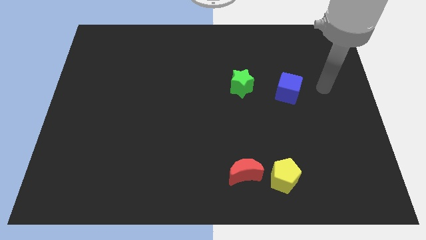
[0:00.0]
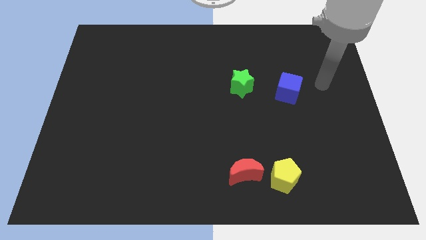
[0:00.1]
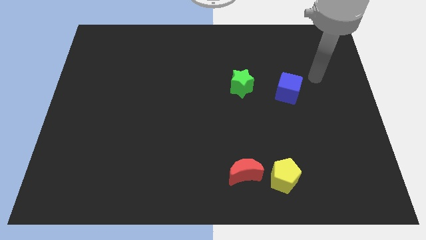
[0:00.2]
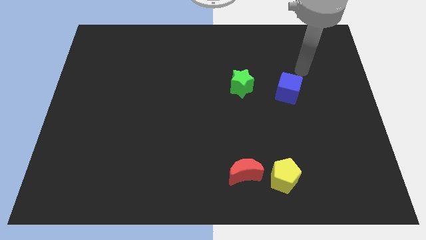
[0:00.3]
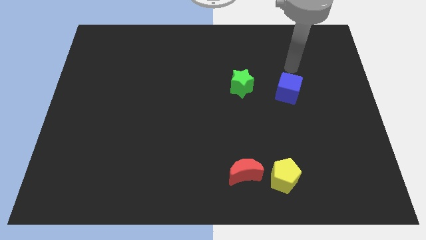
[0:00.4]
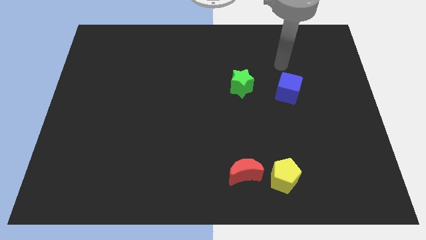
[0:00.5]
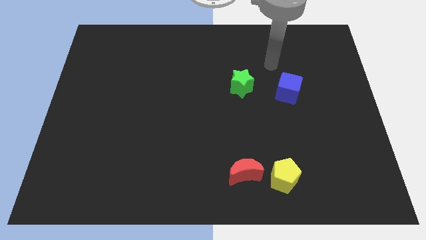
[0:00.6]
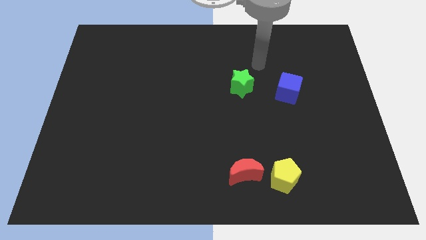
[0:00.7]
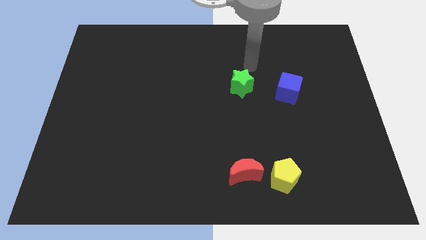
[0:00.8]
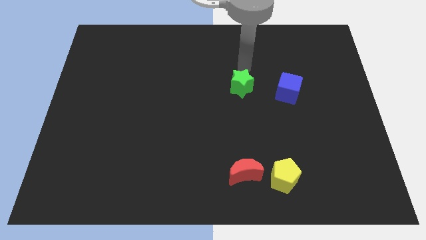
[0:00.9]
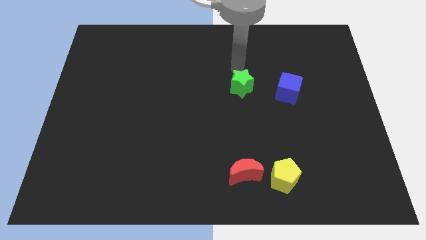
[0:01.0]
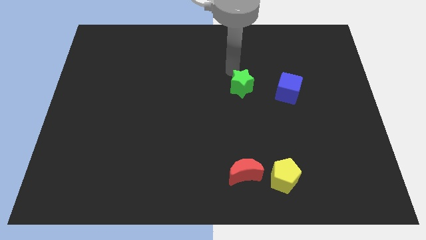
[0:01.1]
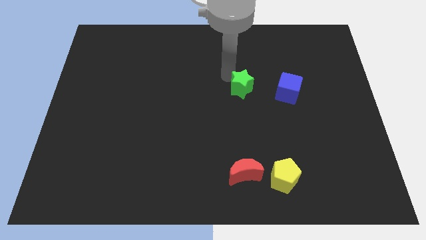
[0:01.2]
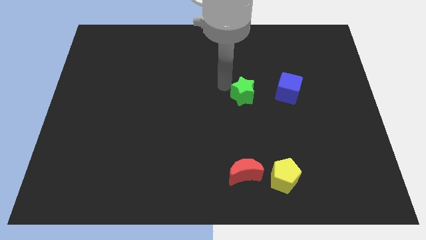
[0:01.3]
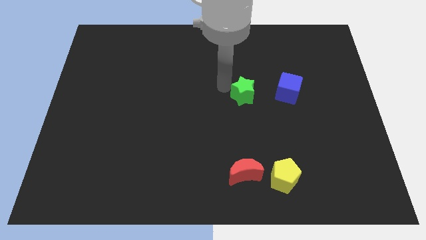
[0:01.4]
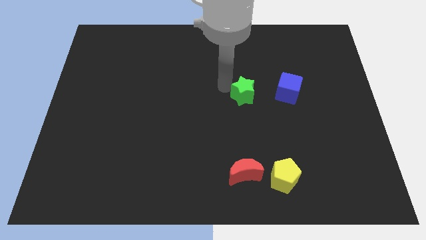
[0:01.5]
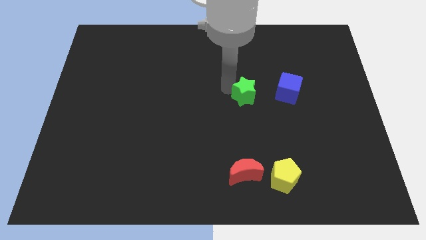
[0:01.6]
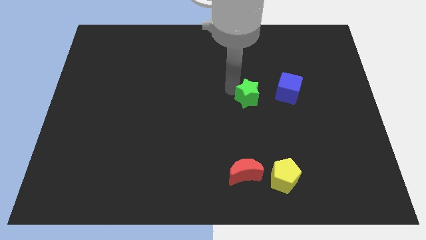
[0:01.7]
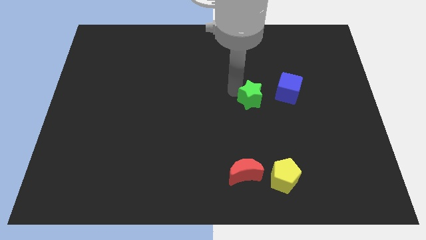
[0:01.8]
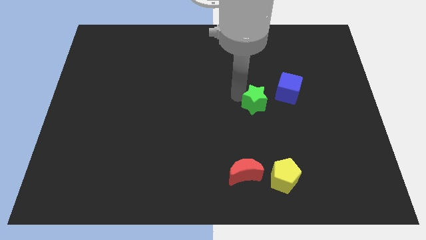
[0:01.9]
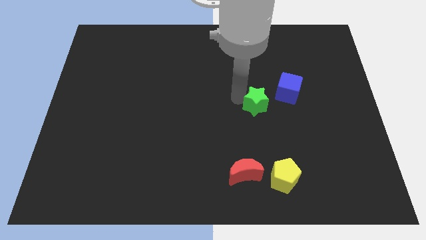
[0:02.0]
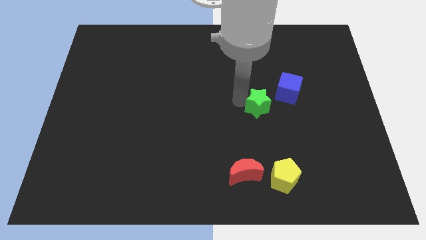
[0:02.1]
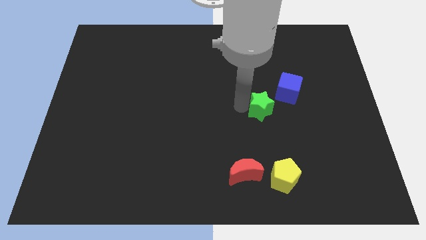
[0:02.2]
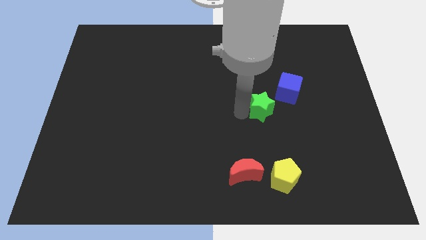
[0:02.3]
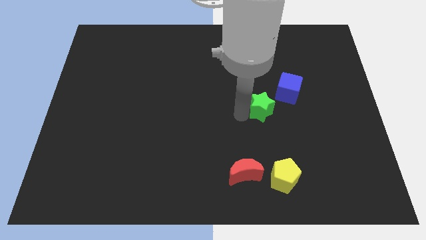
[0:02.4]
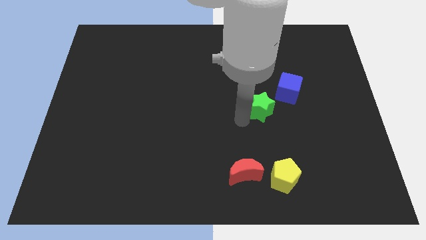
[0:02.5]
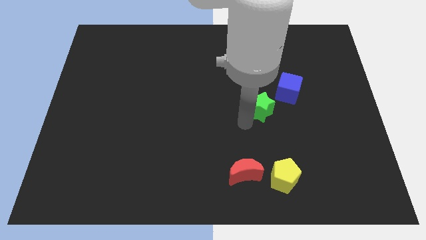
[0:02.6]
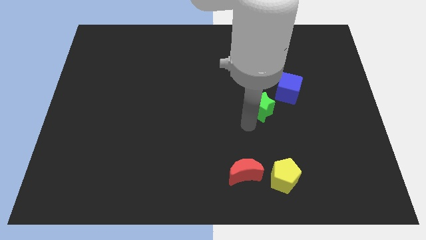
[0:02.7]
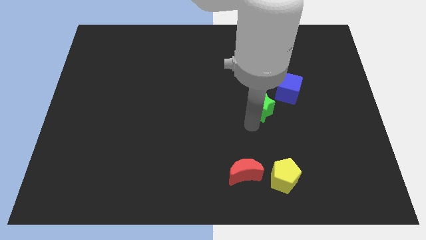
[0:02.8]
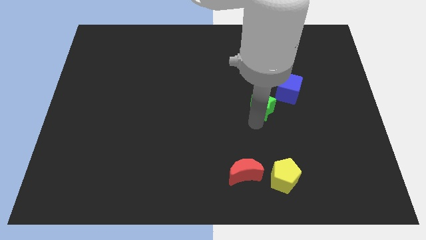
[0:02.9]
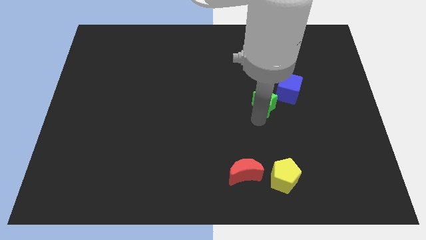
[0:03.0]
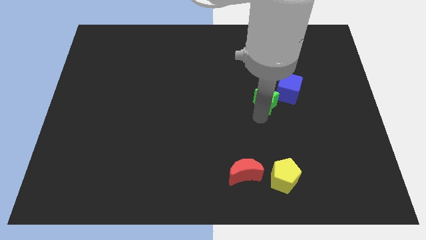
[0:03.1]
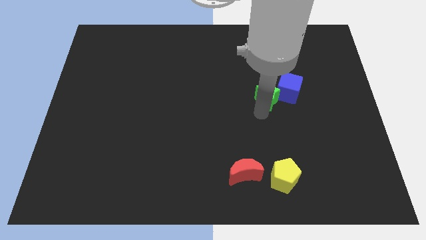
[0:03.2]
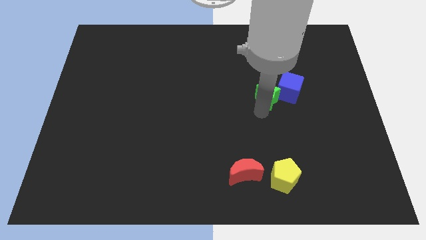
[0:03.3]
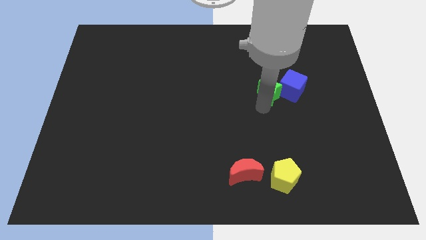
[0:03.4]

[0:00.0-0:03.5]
move the star next to the blue block

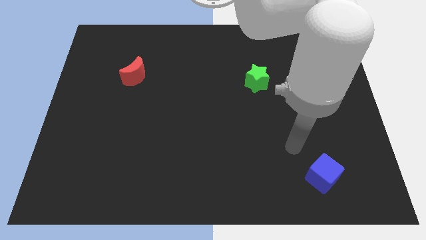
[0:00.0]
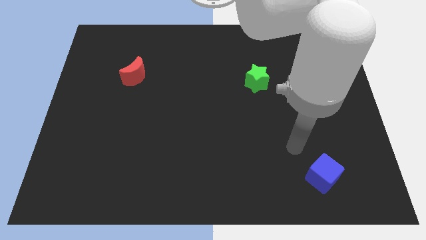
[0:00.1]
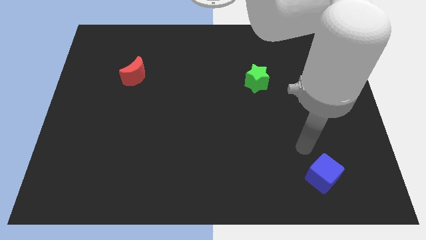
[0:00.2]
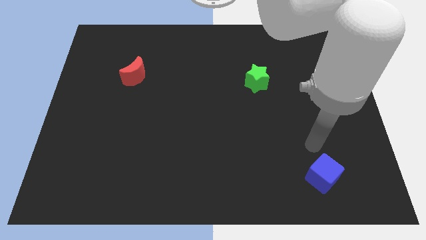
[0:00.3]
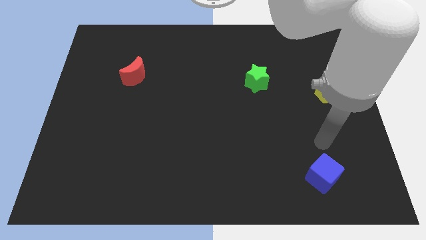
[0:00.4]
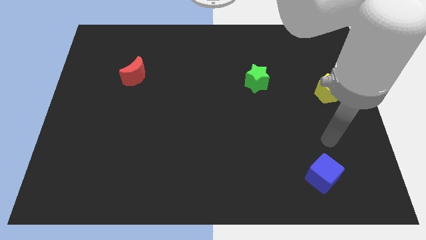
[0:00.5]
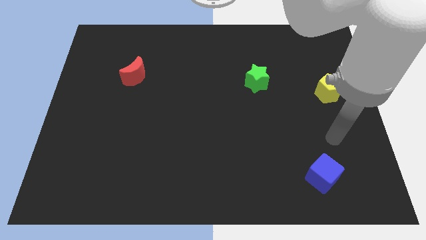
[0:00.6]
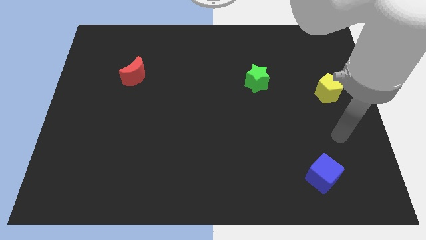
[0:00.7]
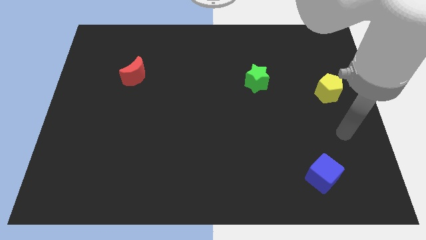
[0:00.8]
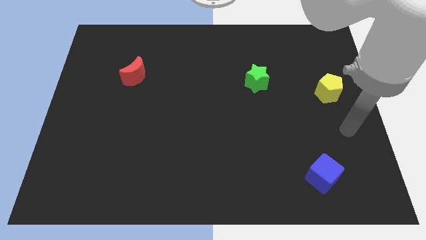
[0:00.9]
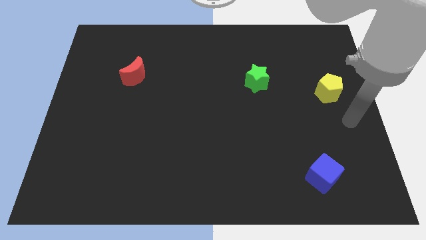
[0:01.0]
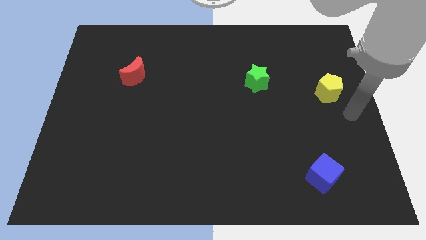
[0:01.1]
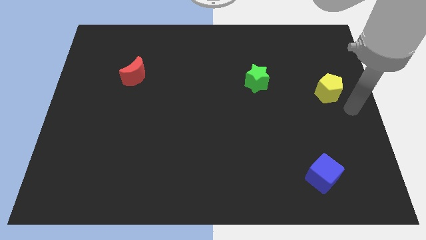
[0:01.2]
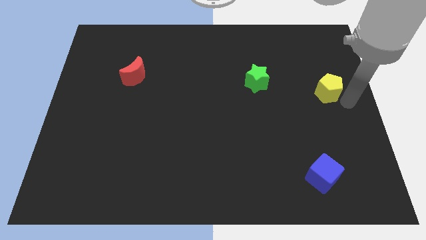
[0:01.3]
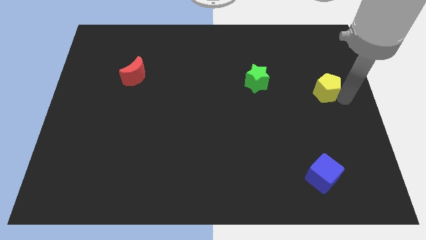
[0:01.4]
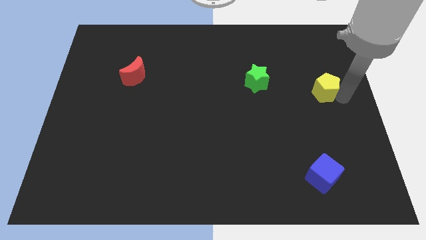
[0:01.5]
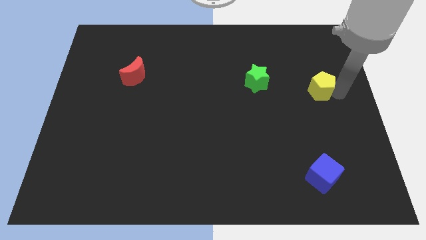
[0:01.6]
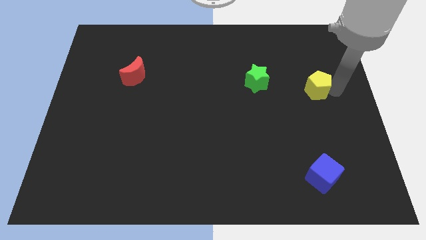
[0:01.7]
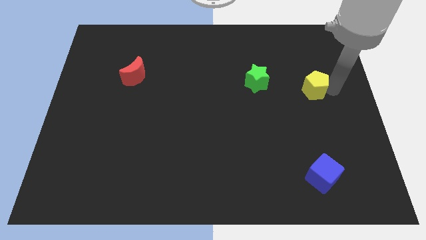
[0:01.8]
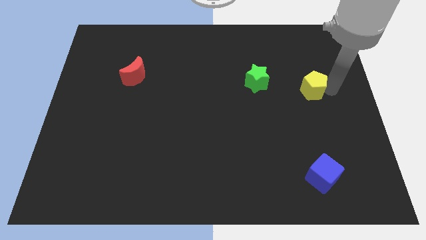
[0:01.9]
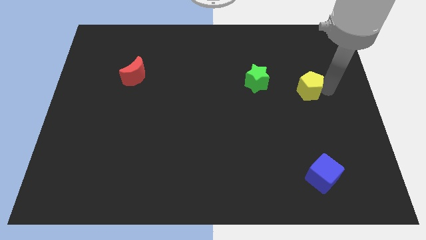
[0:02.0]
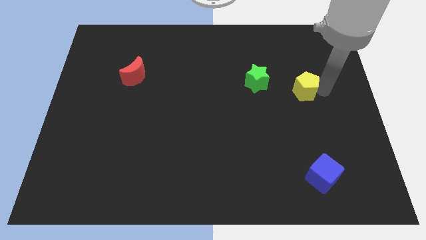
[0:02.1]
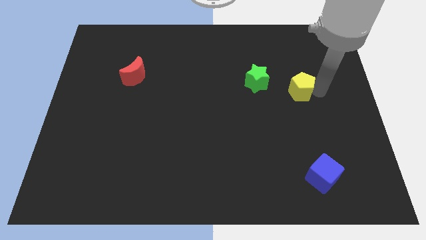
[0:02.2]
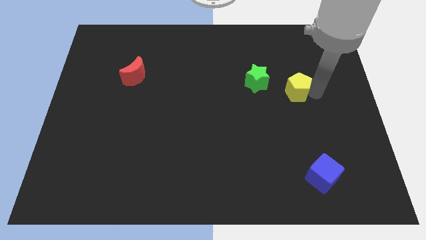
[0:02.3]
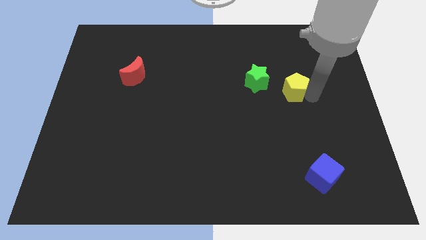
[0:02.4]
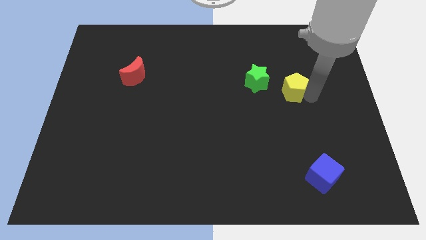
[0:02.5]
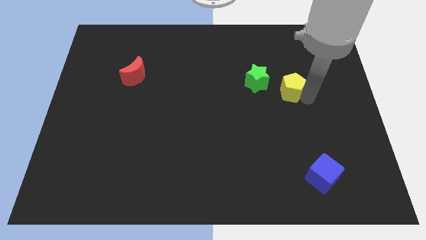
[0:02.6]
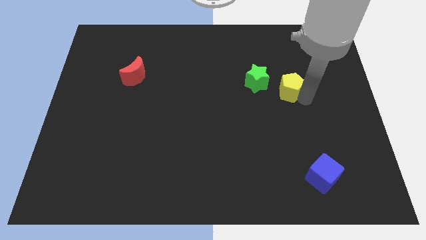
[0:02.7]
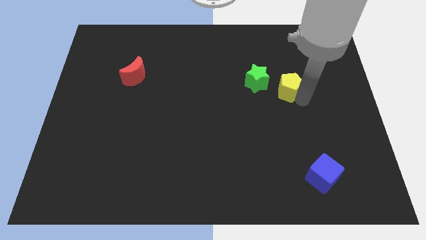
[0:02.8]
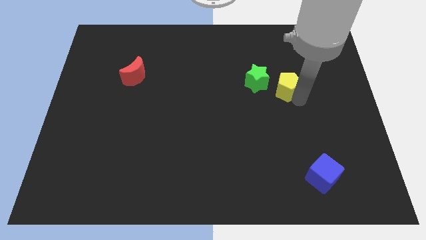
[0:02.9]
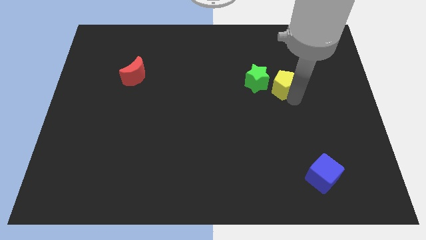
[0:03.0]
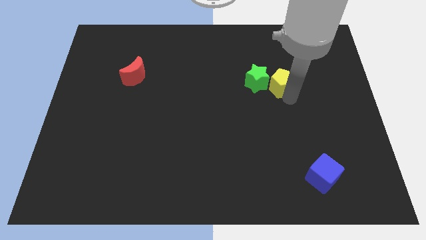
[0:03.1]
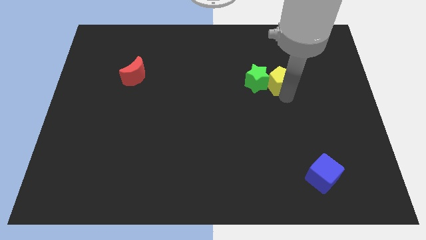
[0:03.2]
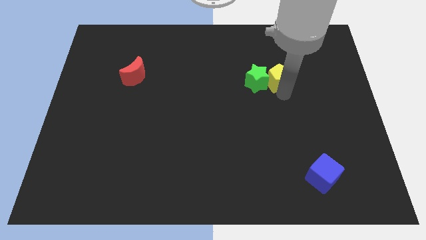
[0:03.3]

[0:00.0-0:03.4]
move the yellow pentagon next to the green block

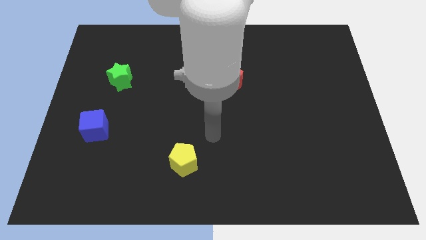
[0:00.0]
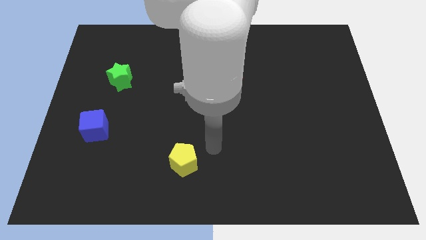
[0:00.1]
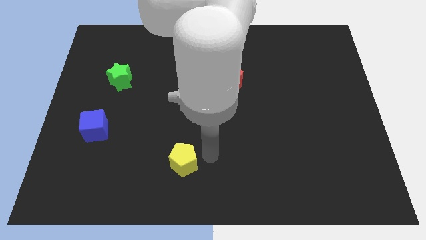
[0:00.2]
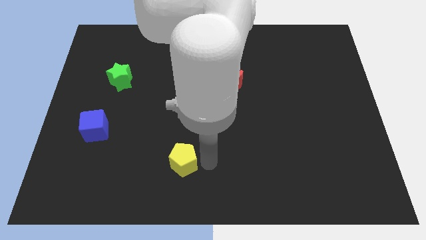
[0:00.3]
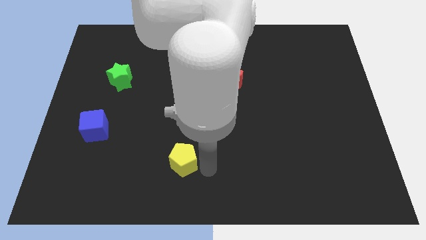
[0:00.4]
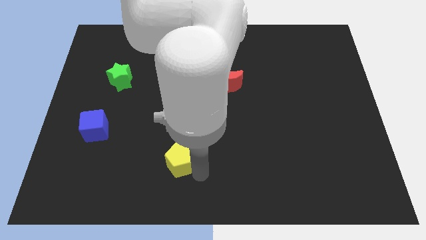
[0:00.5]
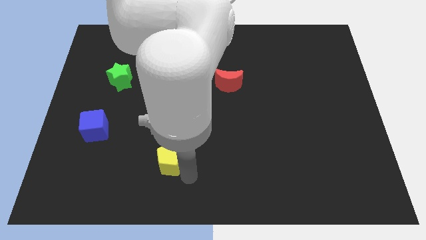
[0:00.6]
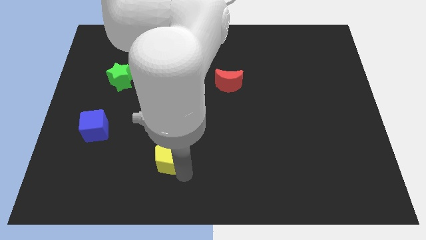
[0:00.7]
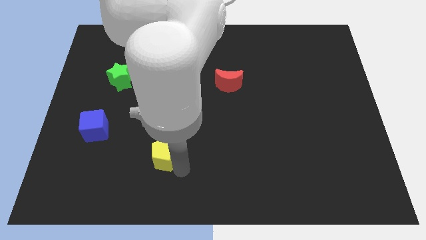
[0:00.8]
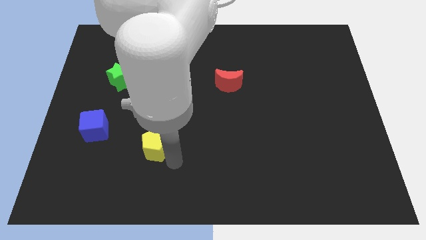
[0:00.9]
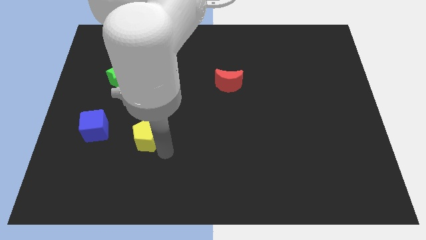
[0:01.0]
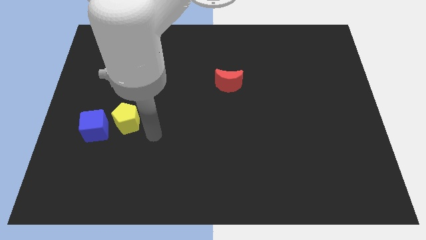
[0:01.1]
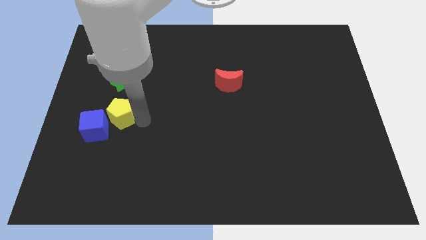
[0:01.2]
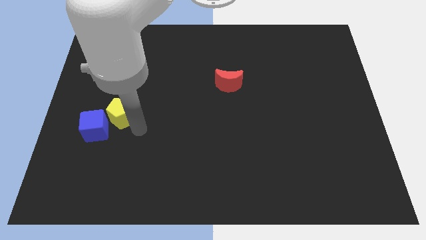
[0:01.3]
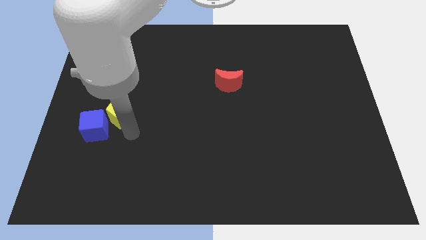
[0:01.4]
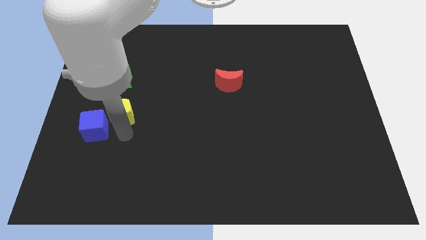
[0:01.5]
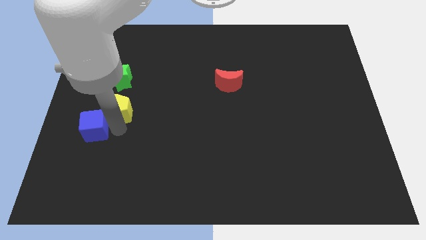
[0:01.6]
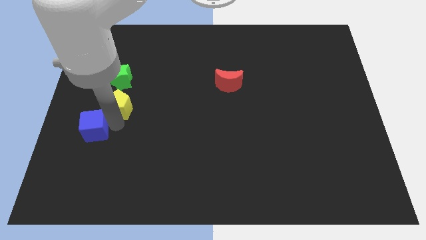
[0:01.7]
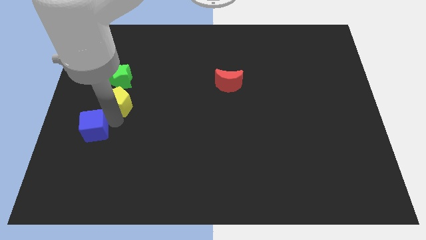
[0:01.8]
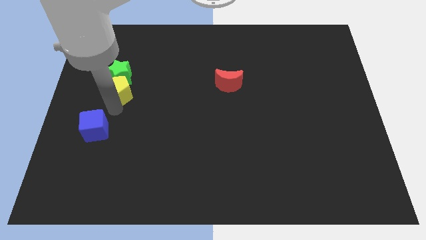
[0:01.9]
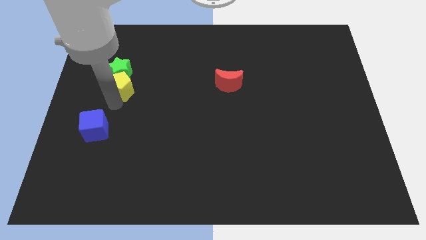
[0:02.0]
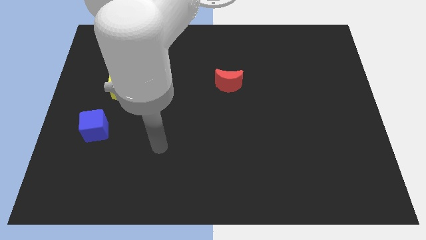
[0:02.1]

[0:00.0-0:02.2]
slide the yellow block close to the star
